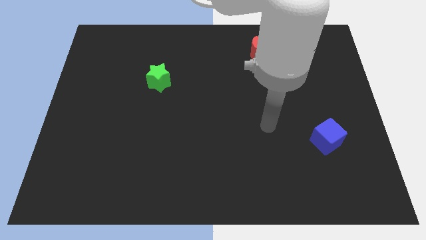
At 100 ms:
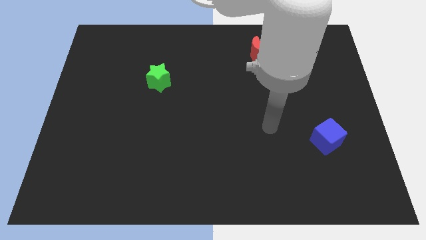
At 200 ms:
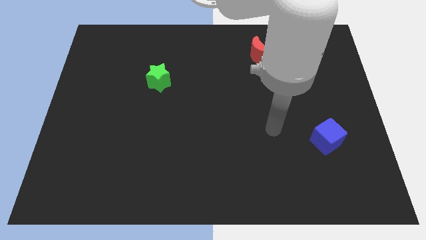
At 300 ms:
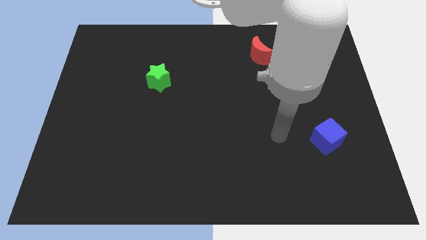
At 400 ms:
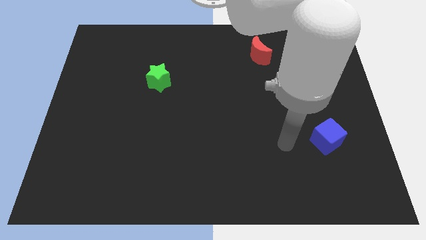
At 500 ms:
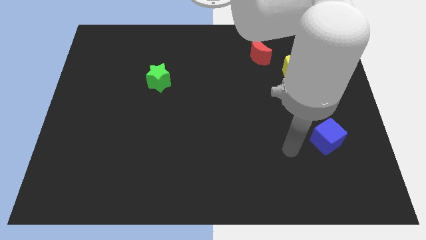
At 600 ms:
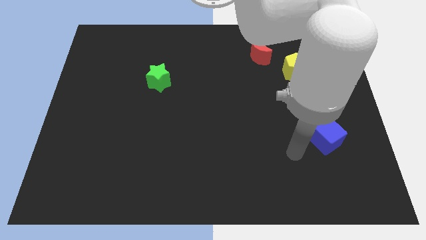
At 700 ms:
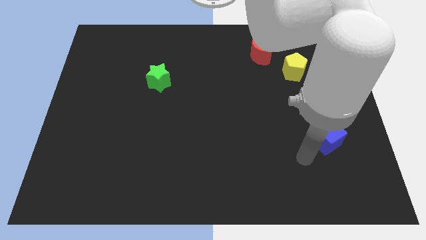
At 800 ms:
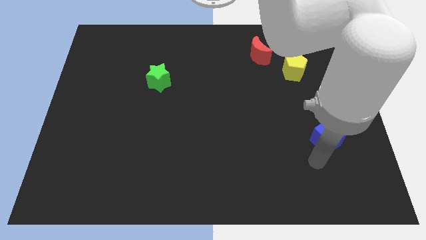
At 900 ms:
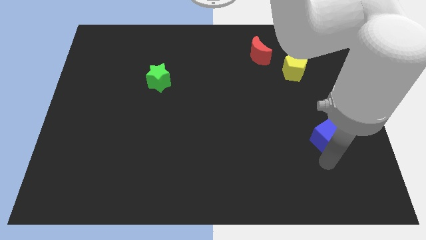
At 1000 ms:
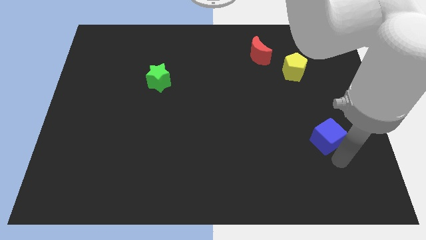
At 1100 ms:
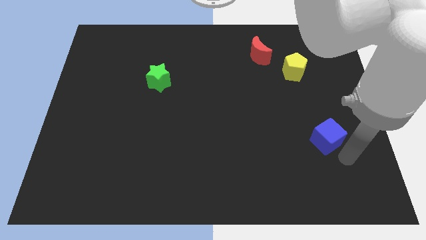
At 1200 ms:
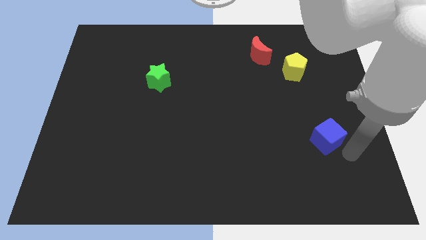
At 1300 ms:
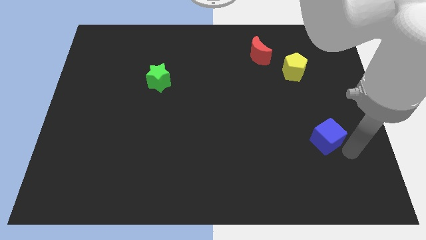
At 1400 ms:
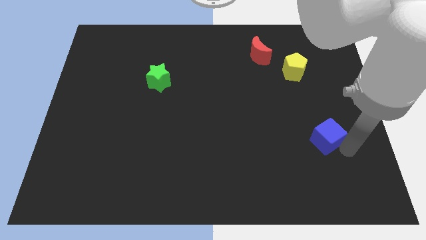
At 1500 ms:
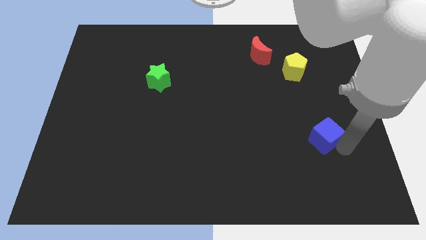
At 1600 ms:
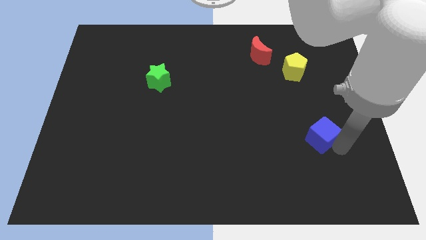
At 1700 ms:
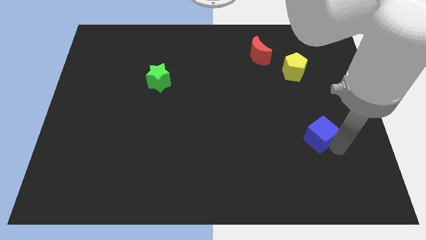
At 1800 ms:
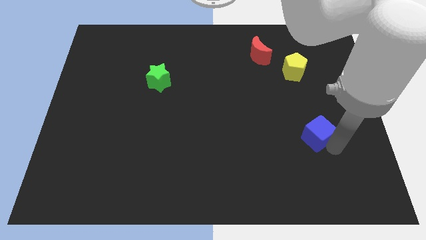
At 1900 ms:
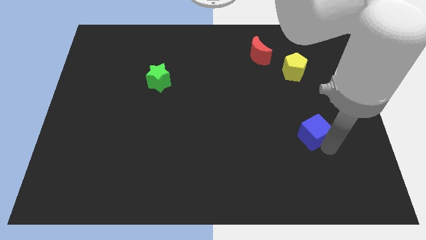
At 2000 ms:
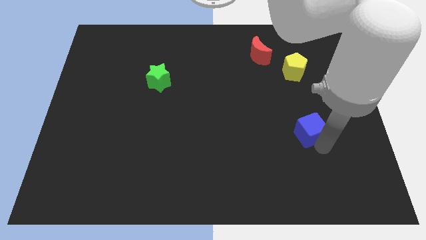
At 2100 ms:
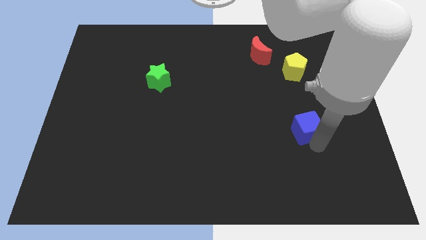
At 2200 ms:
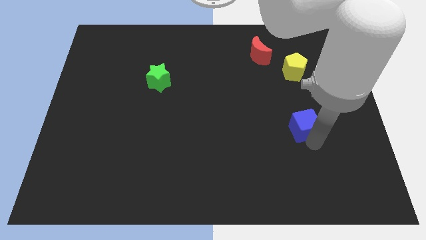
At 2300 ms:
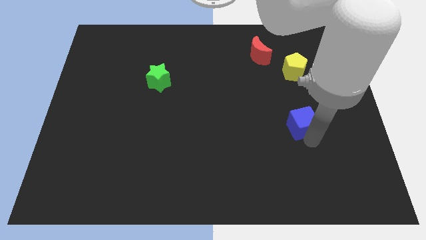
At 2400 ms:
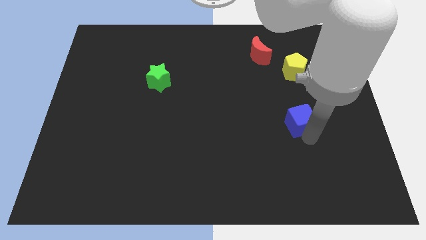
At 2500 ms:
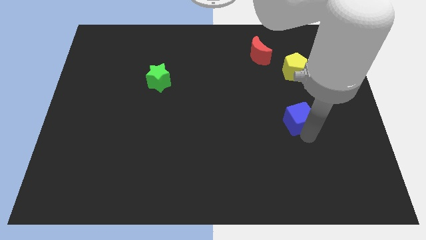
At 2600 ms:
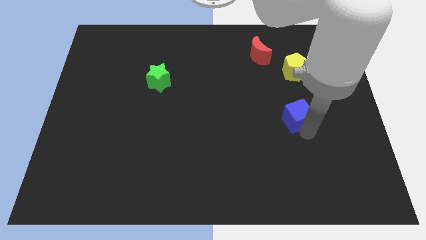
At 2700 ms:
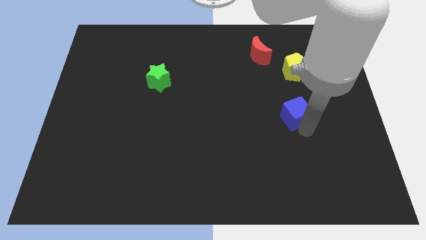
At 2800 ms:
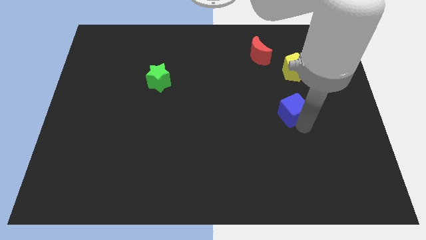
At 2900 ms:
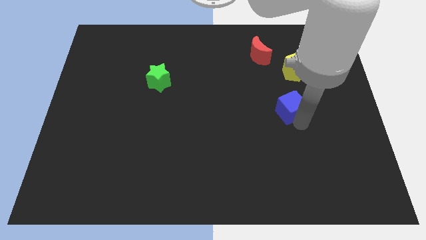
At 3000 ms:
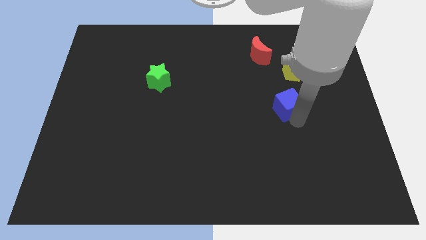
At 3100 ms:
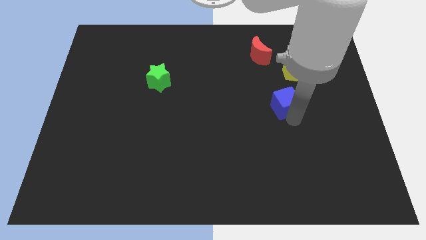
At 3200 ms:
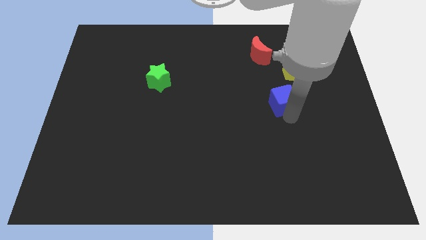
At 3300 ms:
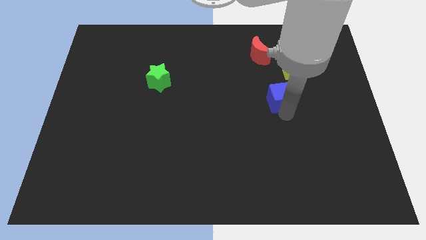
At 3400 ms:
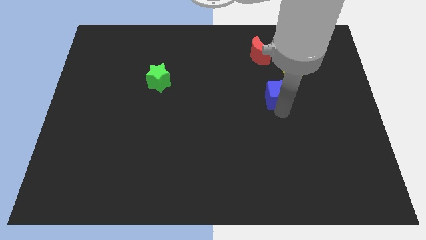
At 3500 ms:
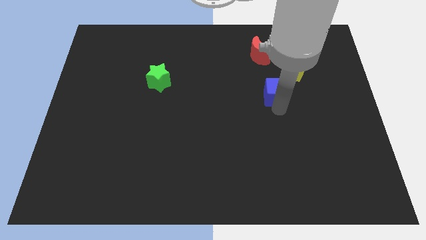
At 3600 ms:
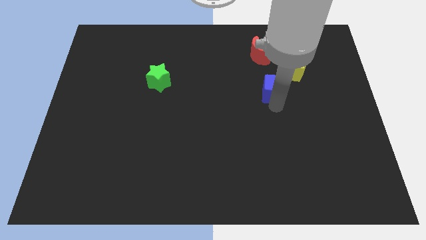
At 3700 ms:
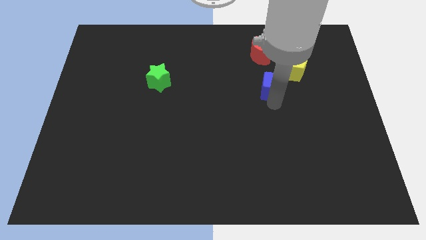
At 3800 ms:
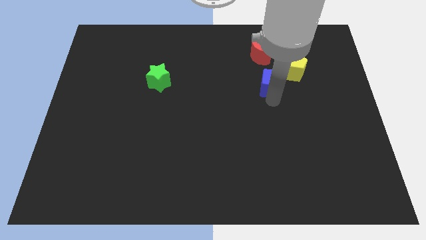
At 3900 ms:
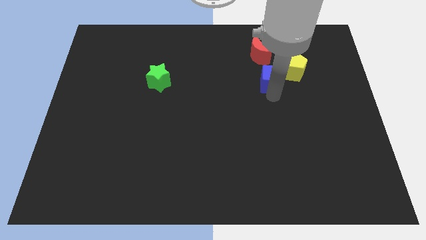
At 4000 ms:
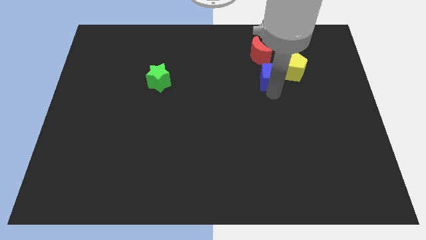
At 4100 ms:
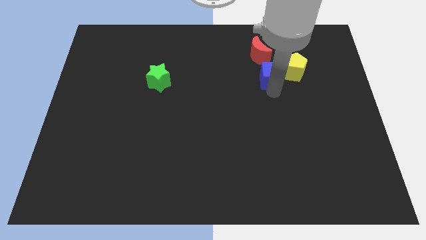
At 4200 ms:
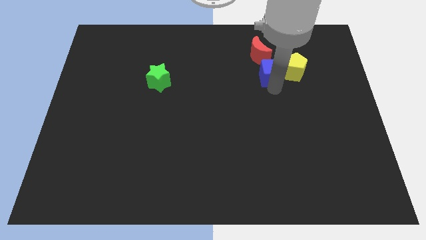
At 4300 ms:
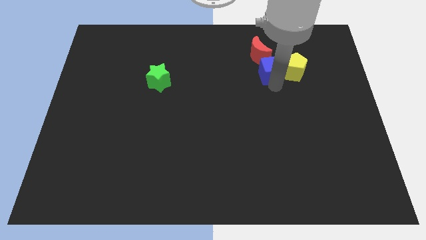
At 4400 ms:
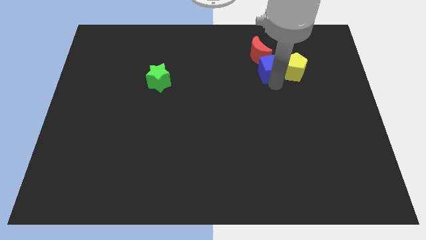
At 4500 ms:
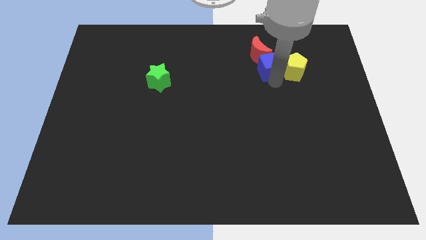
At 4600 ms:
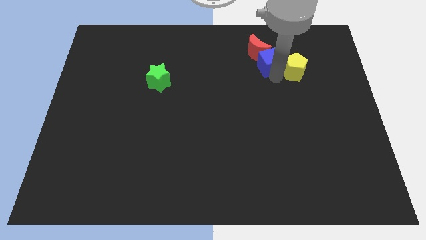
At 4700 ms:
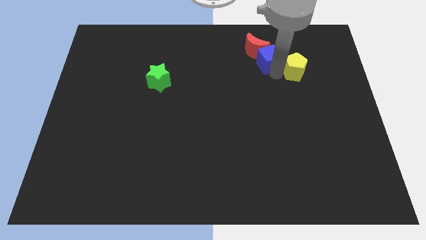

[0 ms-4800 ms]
slide the cube close to the red moon

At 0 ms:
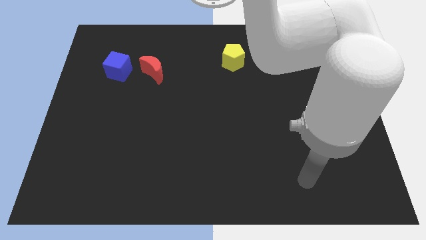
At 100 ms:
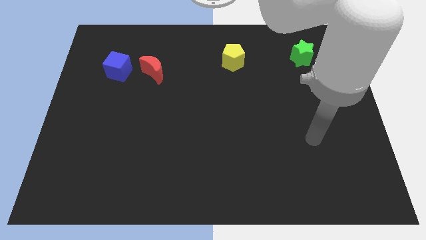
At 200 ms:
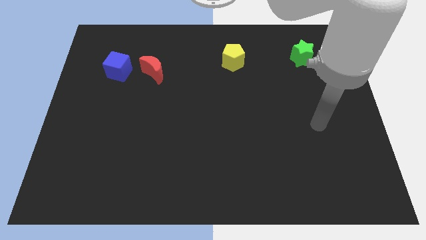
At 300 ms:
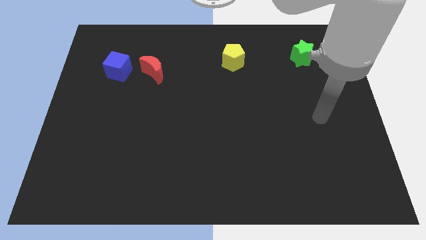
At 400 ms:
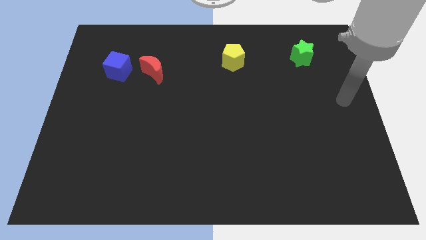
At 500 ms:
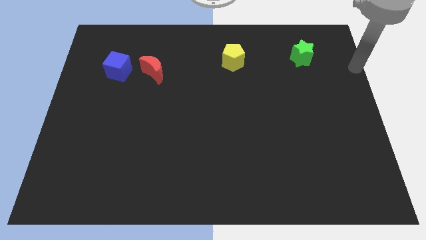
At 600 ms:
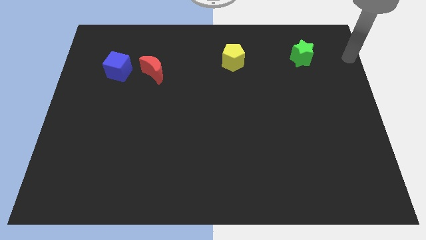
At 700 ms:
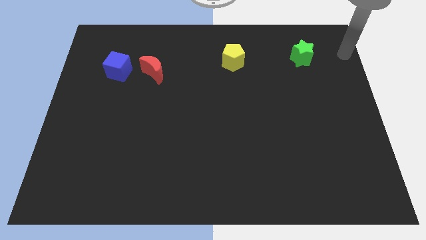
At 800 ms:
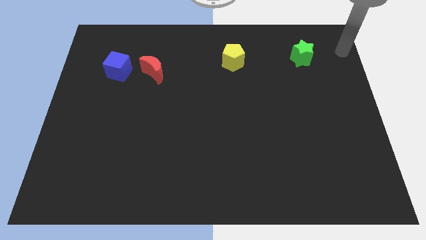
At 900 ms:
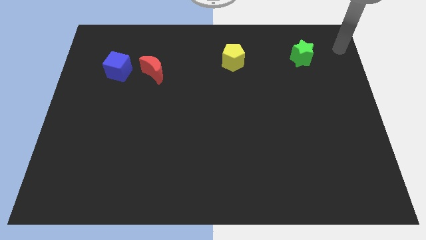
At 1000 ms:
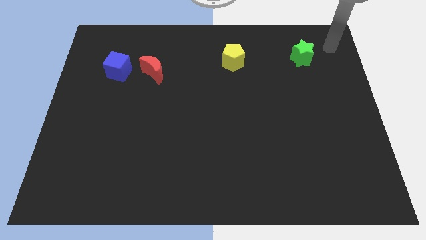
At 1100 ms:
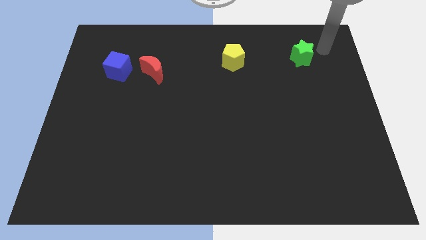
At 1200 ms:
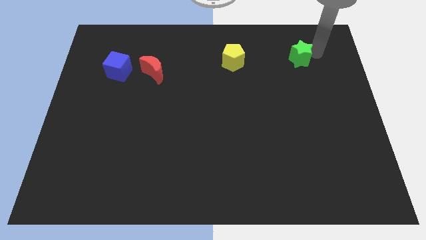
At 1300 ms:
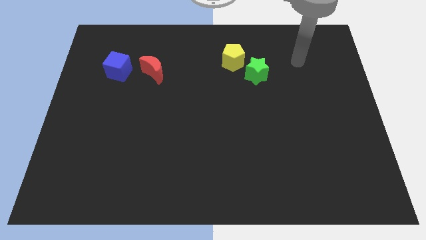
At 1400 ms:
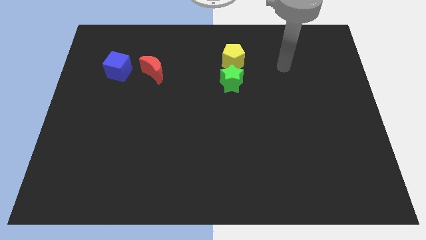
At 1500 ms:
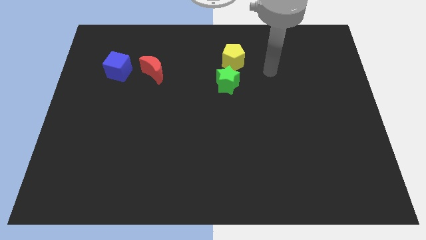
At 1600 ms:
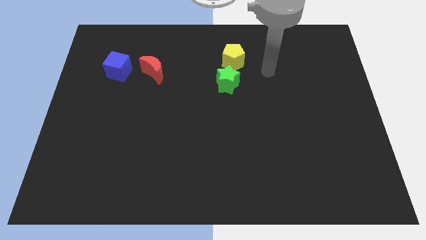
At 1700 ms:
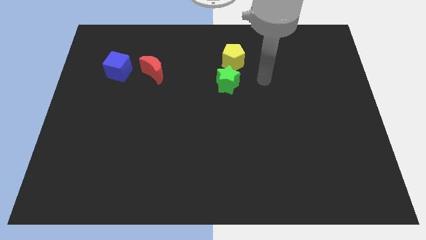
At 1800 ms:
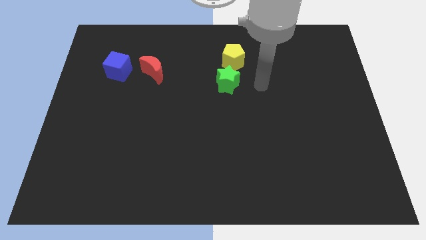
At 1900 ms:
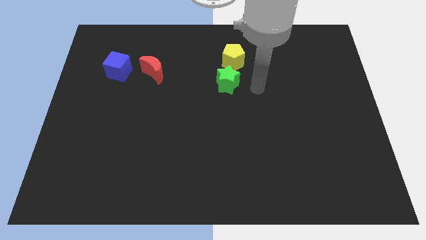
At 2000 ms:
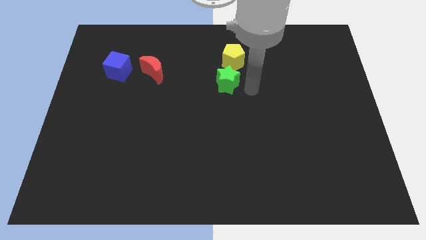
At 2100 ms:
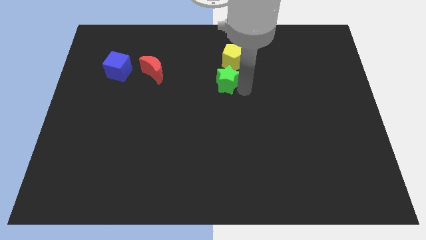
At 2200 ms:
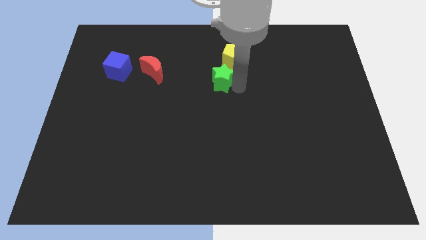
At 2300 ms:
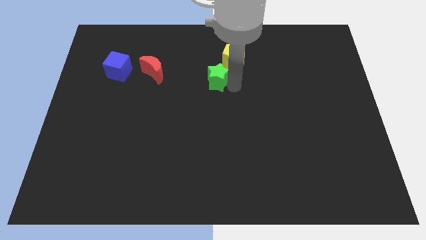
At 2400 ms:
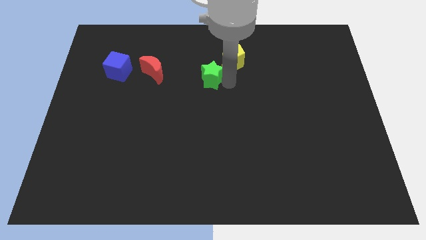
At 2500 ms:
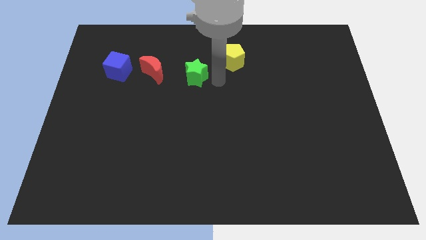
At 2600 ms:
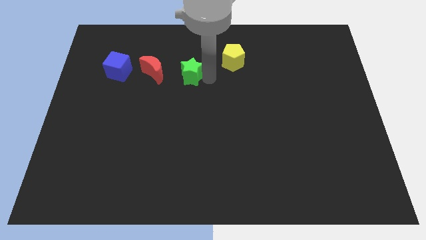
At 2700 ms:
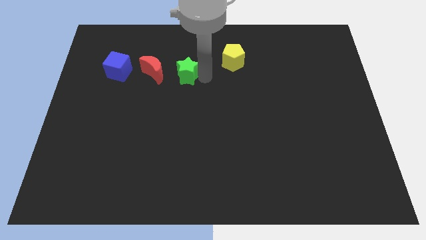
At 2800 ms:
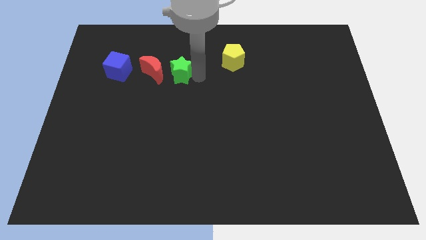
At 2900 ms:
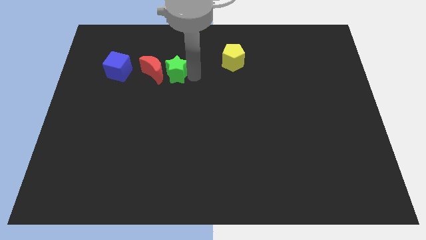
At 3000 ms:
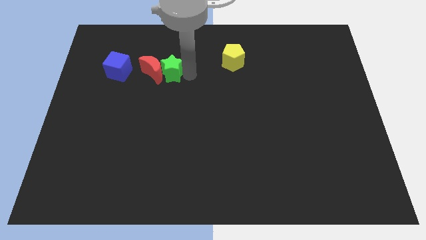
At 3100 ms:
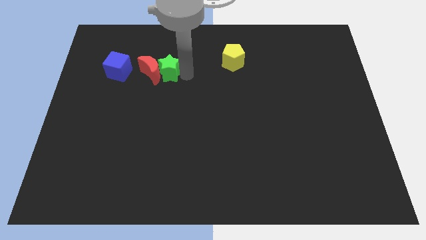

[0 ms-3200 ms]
move the green block close to the red moon

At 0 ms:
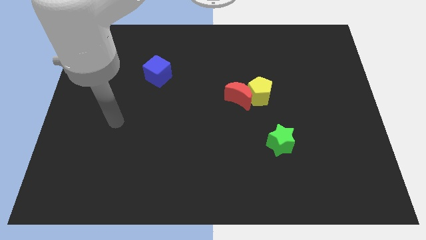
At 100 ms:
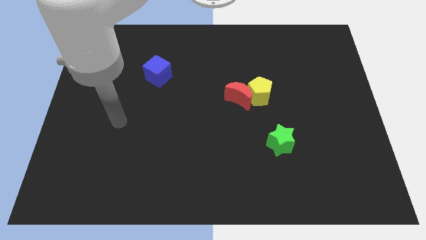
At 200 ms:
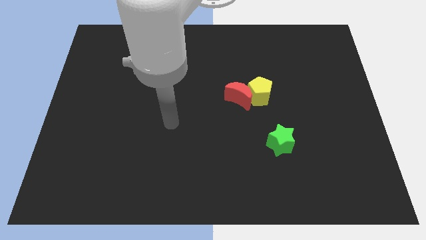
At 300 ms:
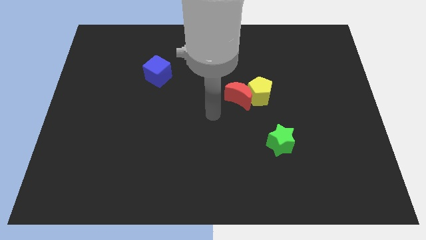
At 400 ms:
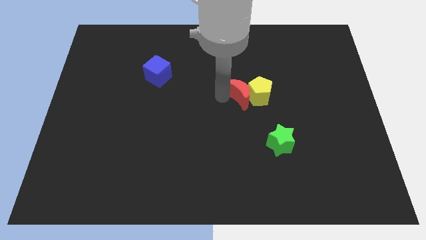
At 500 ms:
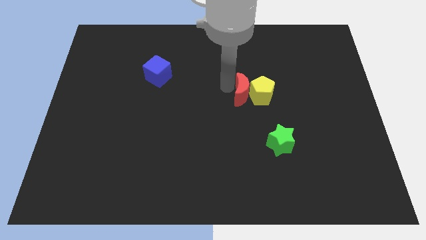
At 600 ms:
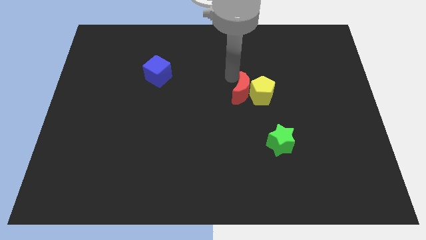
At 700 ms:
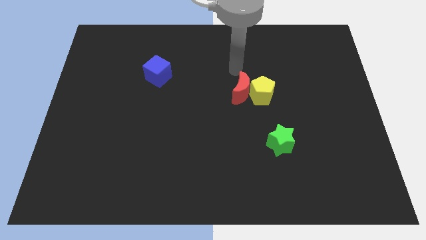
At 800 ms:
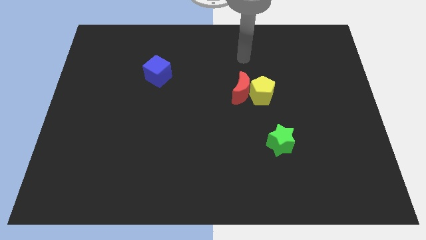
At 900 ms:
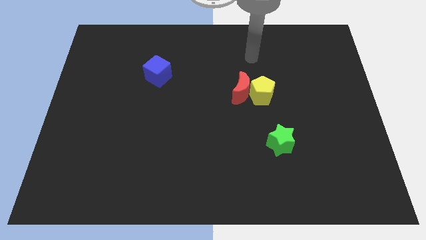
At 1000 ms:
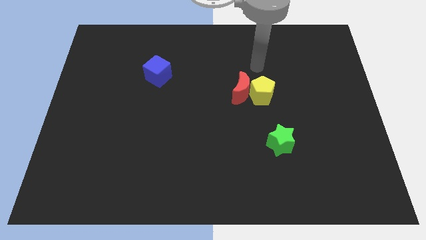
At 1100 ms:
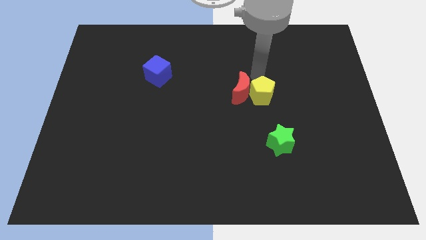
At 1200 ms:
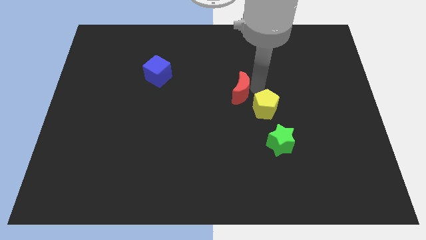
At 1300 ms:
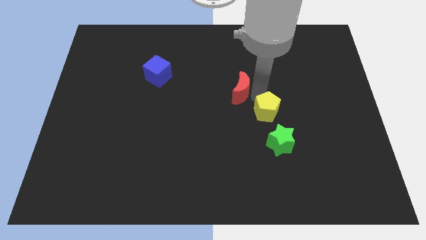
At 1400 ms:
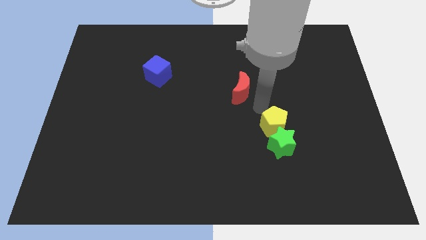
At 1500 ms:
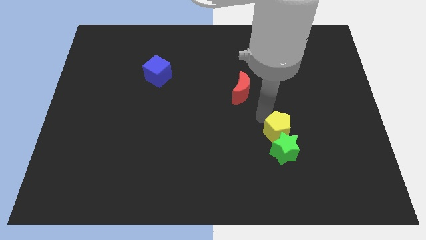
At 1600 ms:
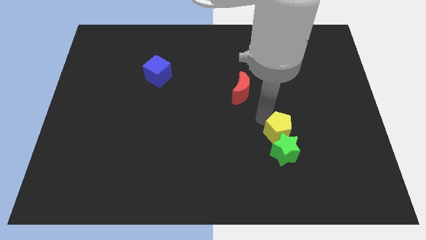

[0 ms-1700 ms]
push the yellow block to the green block
